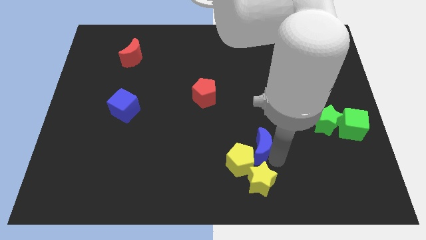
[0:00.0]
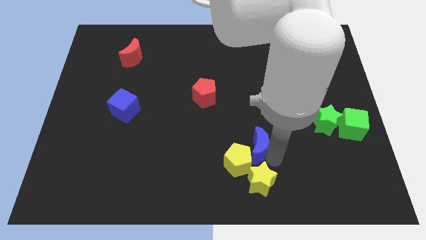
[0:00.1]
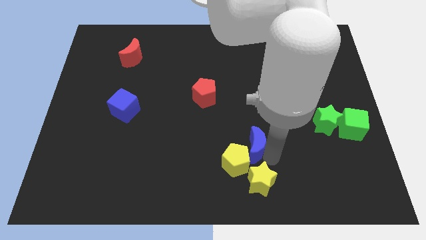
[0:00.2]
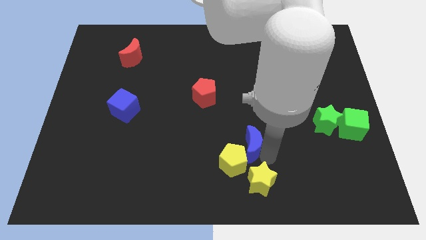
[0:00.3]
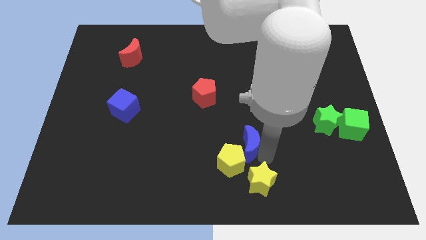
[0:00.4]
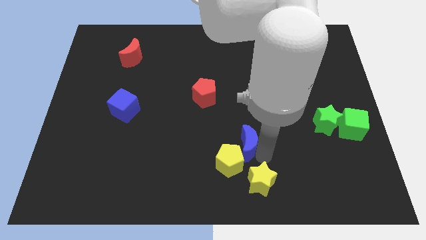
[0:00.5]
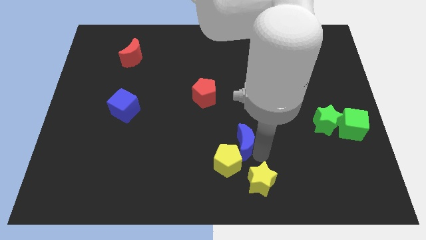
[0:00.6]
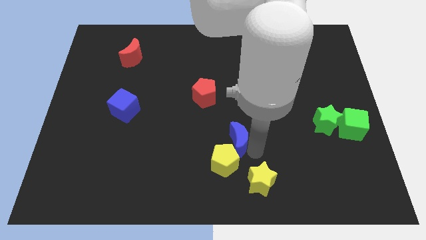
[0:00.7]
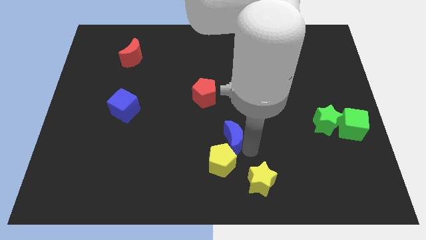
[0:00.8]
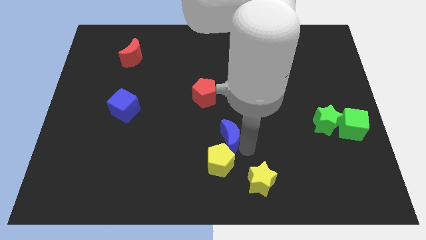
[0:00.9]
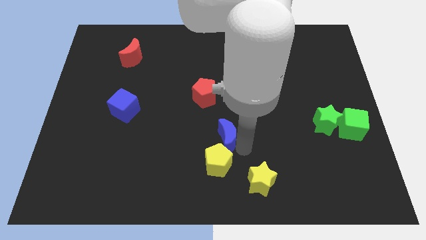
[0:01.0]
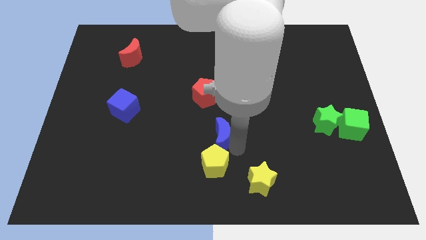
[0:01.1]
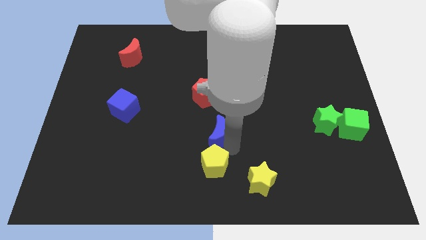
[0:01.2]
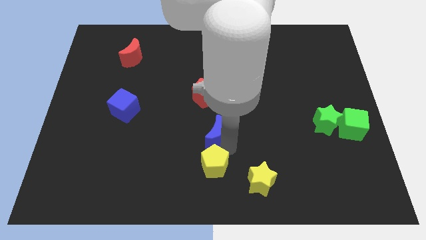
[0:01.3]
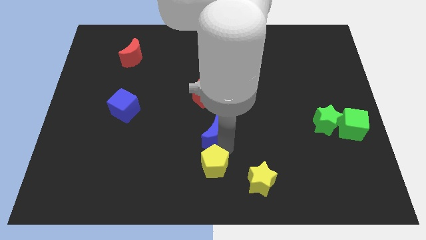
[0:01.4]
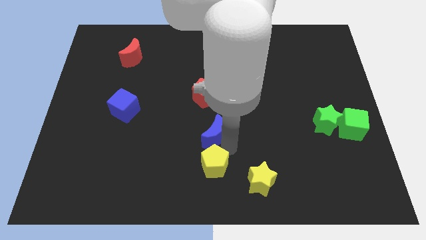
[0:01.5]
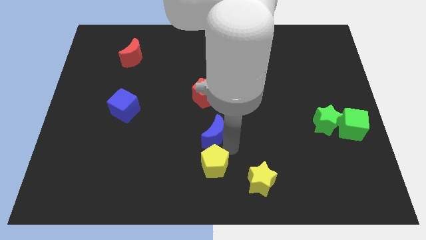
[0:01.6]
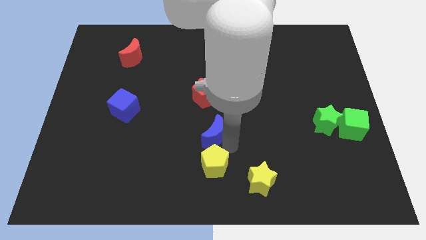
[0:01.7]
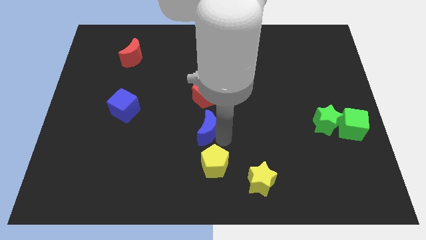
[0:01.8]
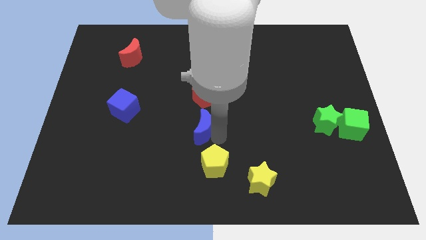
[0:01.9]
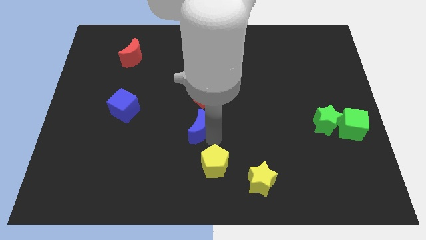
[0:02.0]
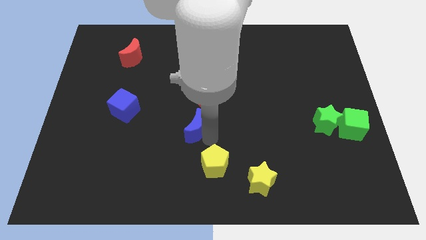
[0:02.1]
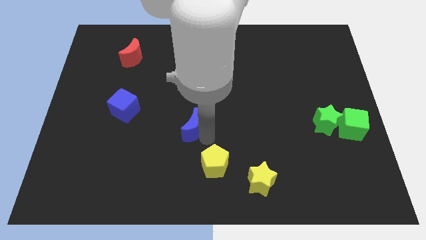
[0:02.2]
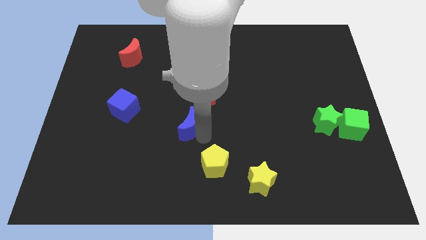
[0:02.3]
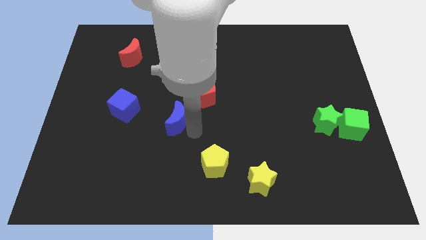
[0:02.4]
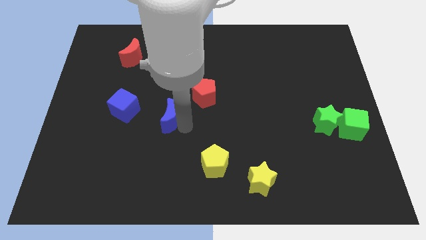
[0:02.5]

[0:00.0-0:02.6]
separate the blue semicircle from the yellow pentagon

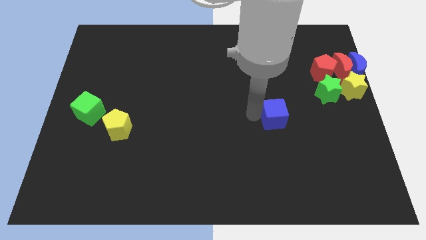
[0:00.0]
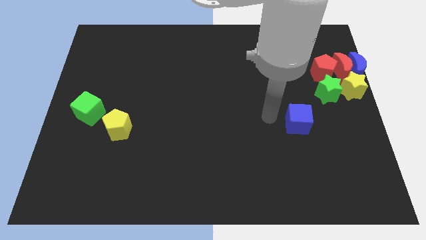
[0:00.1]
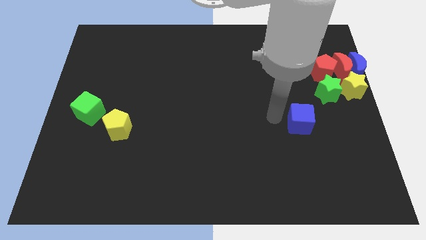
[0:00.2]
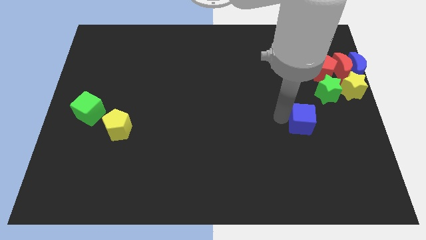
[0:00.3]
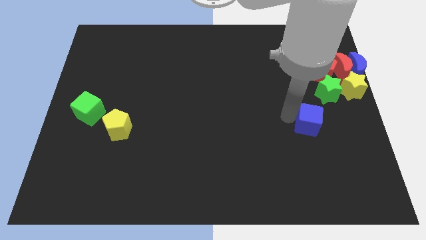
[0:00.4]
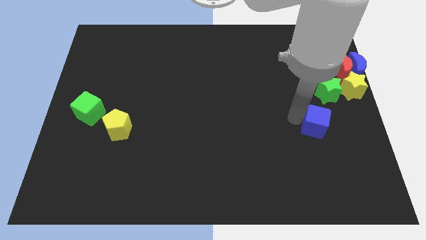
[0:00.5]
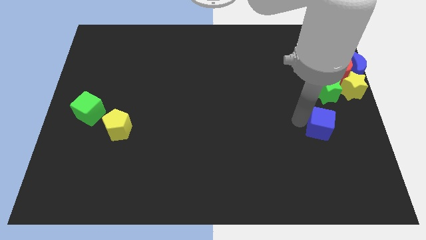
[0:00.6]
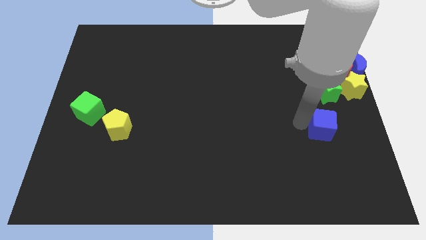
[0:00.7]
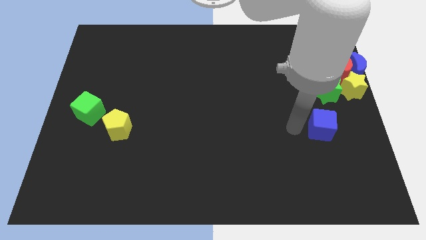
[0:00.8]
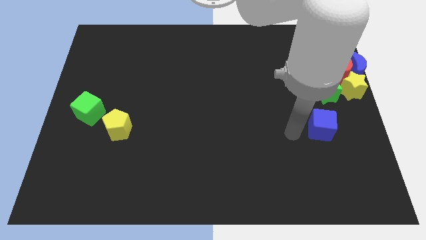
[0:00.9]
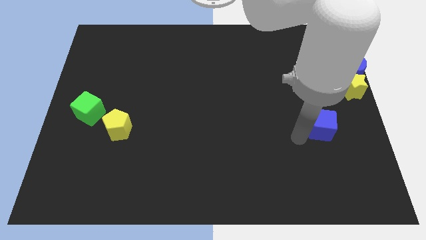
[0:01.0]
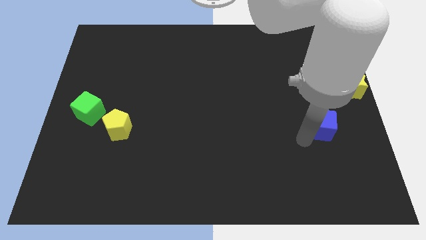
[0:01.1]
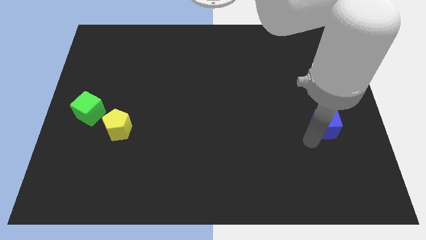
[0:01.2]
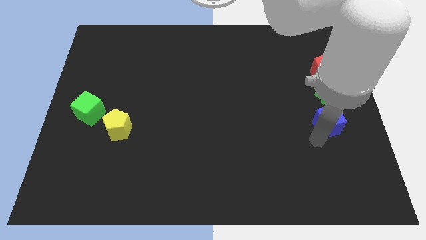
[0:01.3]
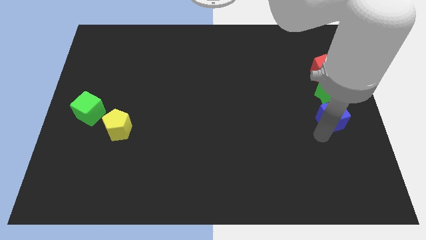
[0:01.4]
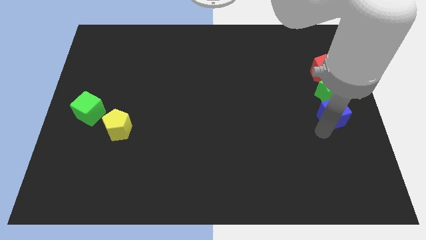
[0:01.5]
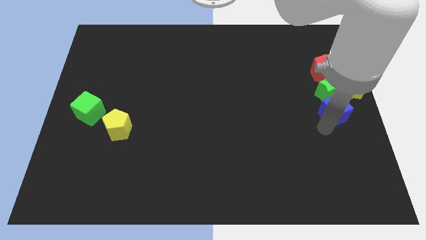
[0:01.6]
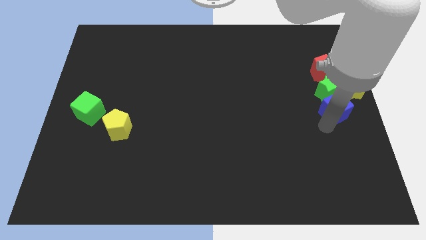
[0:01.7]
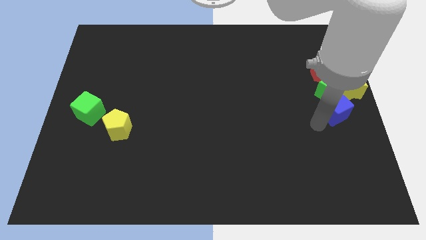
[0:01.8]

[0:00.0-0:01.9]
place blue cube below the green star

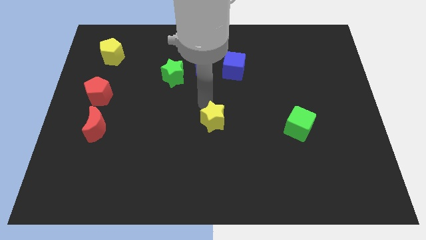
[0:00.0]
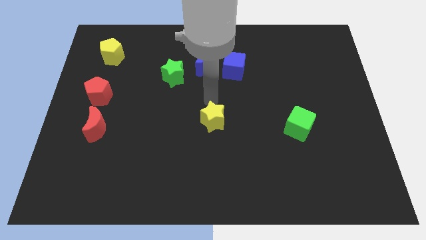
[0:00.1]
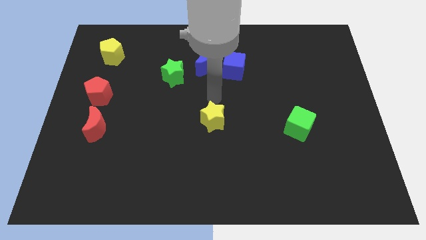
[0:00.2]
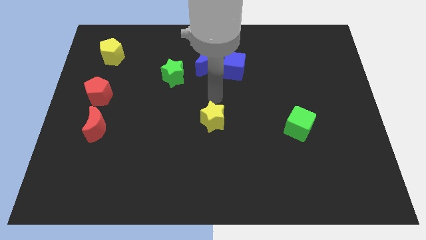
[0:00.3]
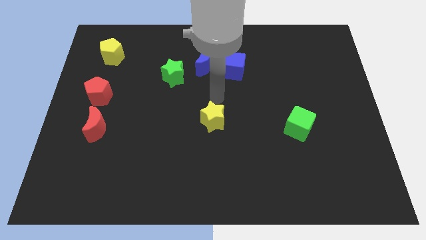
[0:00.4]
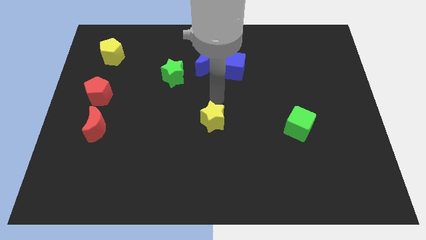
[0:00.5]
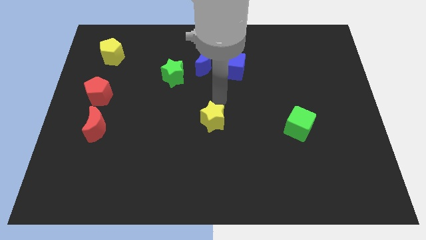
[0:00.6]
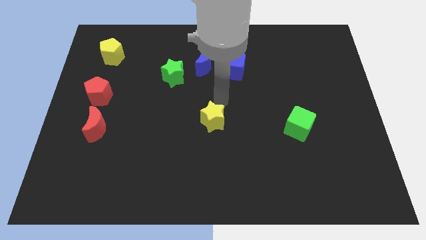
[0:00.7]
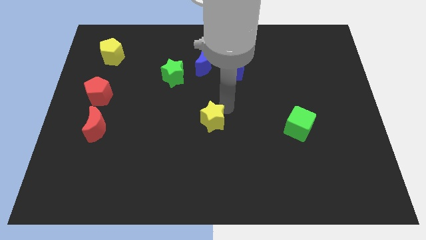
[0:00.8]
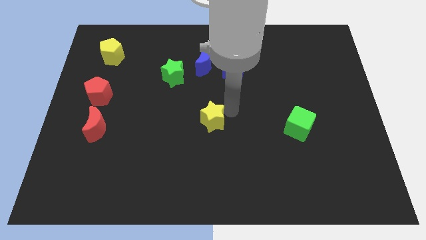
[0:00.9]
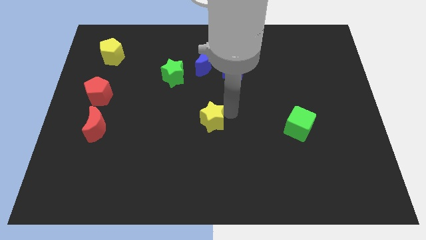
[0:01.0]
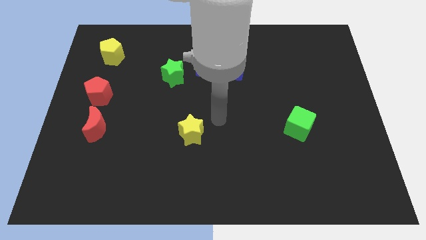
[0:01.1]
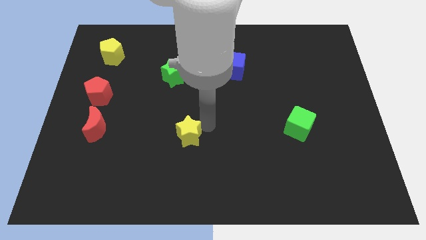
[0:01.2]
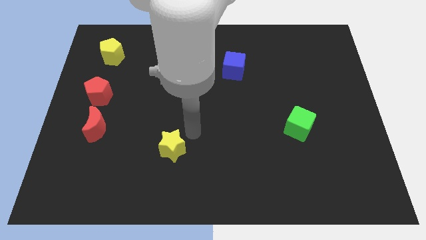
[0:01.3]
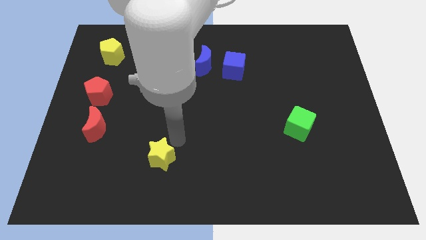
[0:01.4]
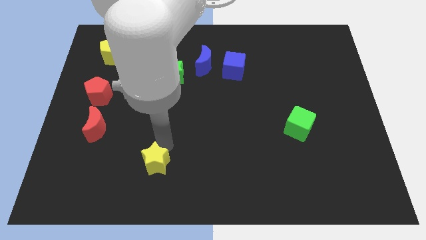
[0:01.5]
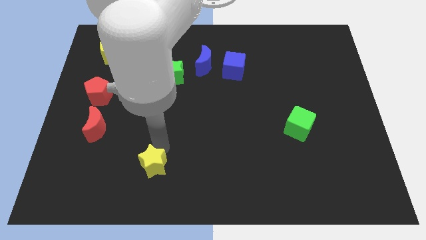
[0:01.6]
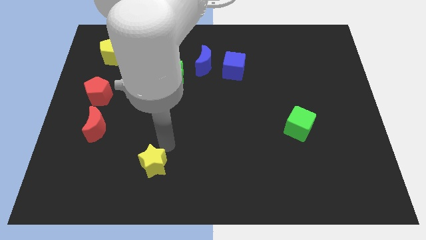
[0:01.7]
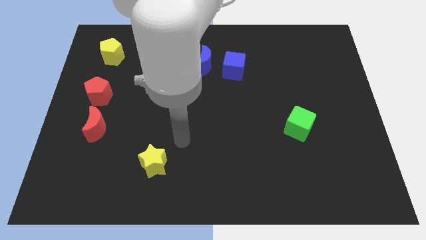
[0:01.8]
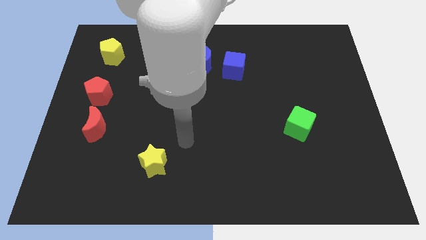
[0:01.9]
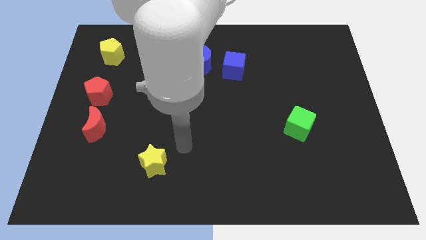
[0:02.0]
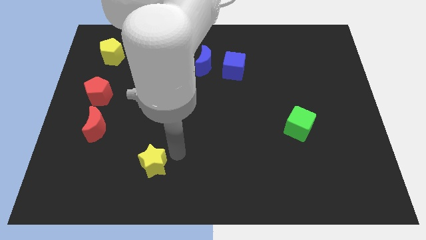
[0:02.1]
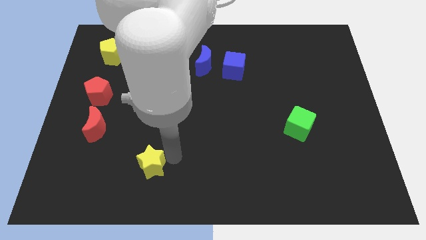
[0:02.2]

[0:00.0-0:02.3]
push the yellow star towards the bottom left corner of the board

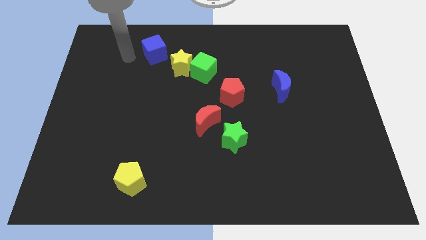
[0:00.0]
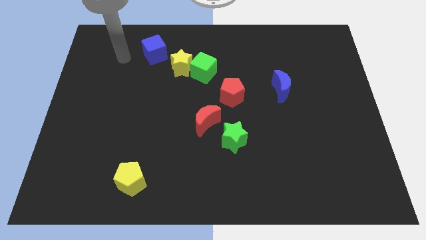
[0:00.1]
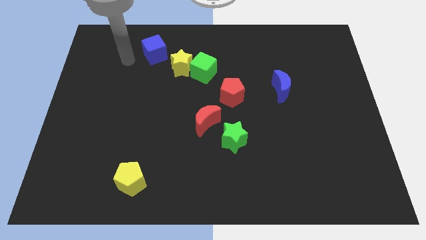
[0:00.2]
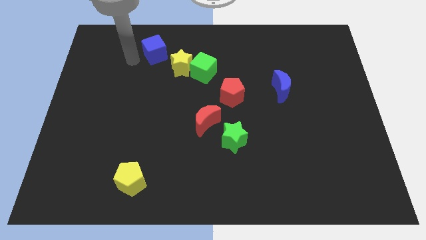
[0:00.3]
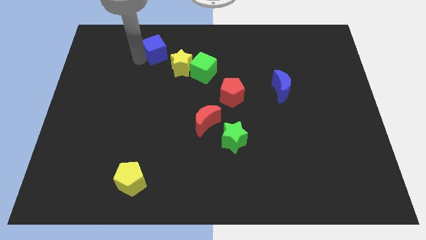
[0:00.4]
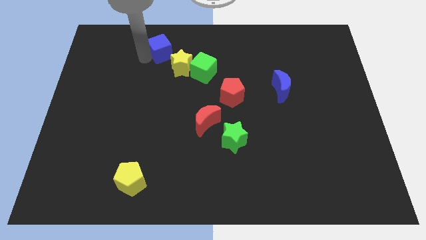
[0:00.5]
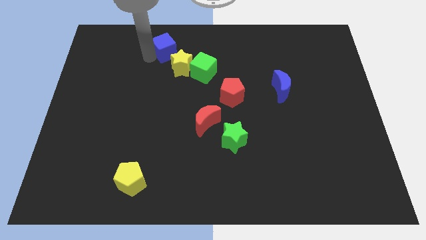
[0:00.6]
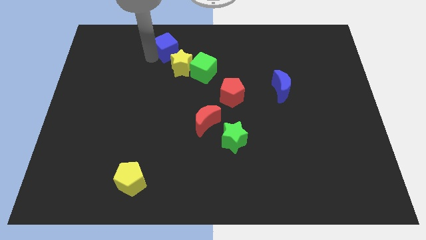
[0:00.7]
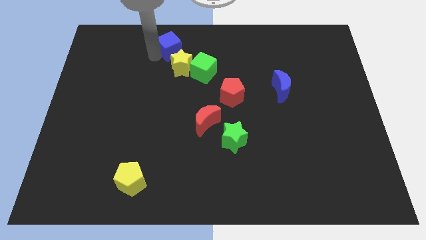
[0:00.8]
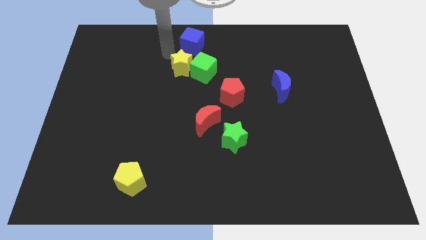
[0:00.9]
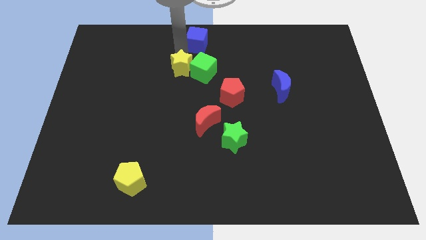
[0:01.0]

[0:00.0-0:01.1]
place the blue cube above the yellow star

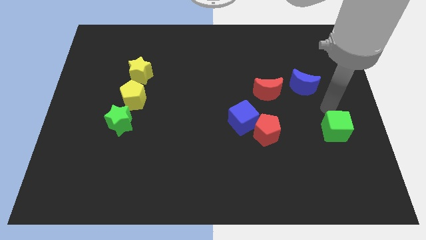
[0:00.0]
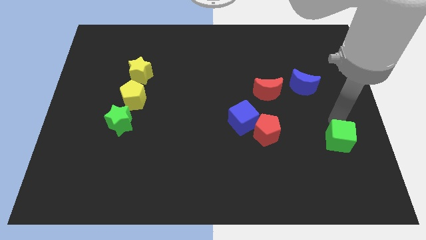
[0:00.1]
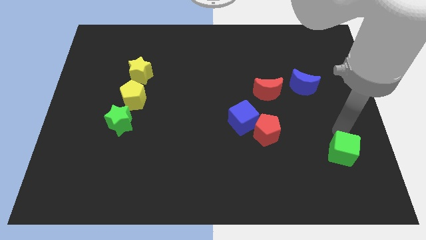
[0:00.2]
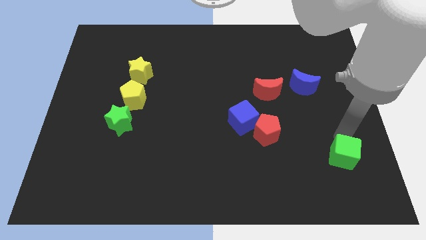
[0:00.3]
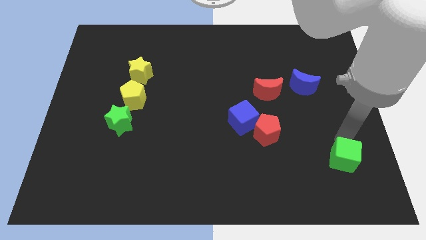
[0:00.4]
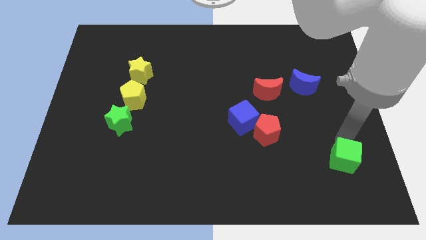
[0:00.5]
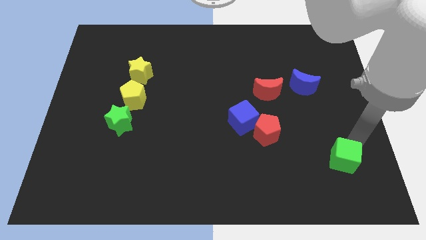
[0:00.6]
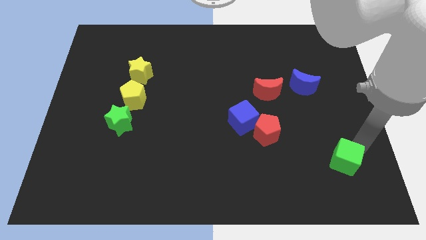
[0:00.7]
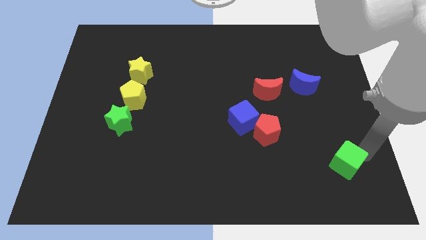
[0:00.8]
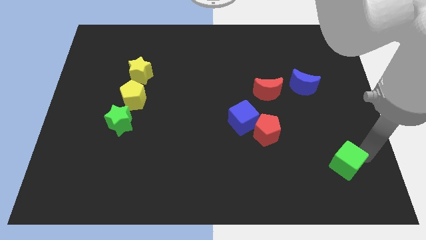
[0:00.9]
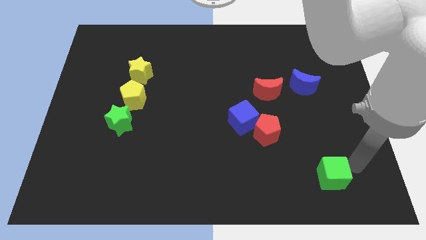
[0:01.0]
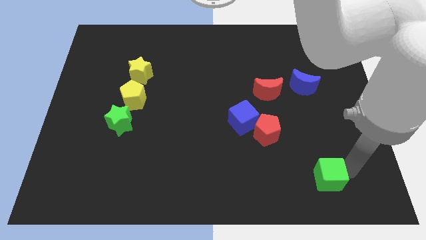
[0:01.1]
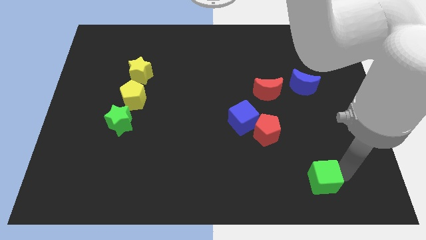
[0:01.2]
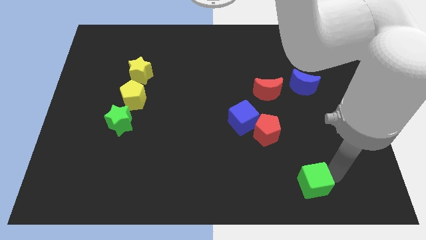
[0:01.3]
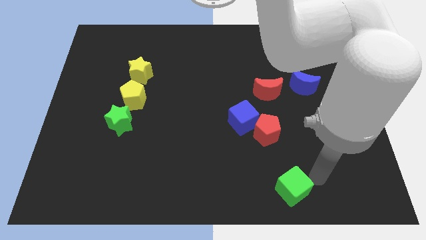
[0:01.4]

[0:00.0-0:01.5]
place the green cube vertically below the blue moon
